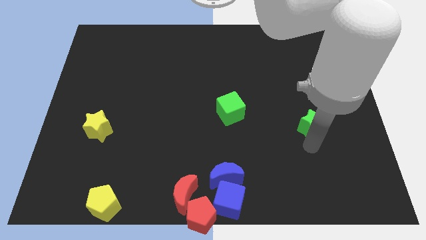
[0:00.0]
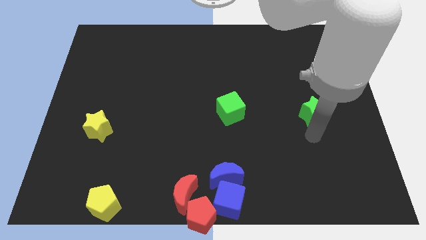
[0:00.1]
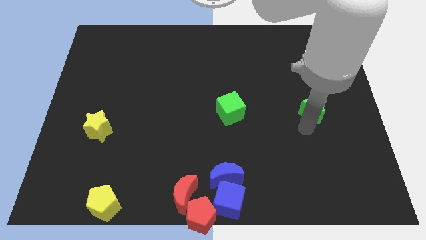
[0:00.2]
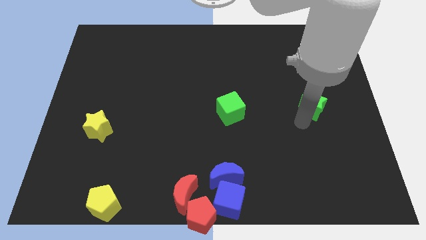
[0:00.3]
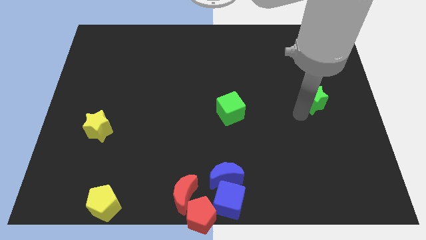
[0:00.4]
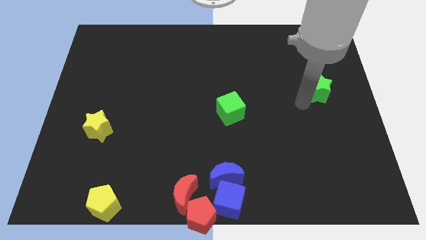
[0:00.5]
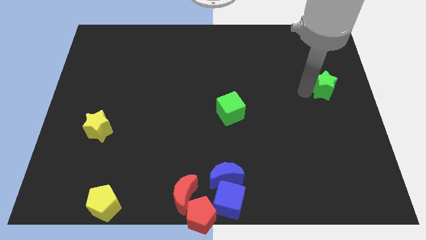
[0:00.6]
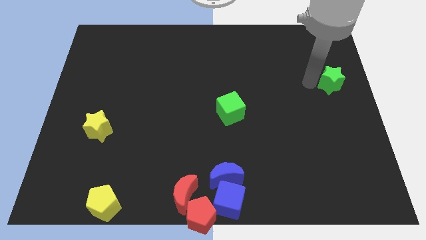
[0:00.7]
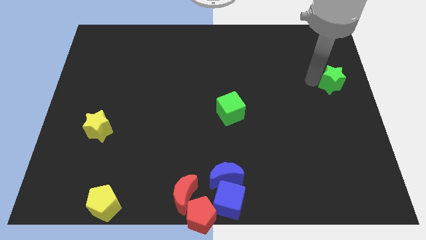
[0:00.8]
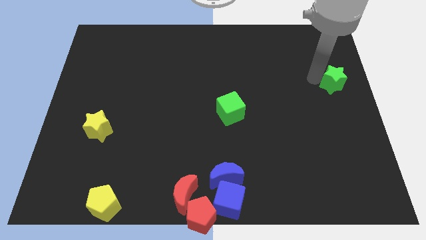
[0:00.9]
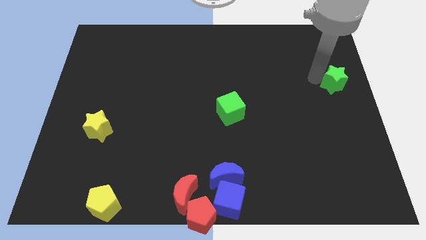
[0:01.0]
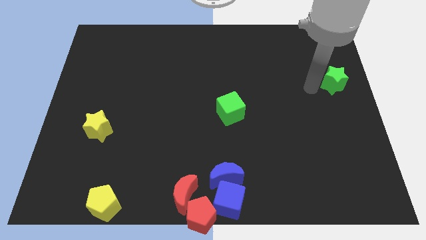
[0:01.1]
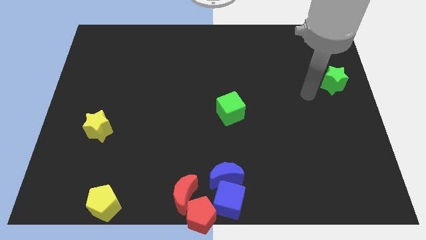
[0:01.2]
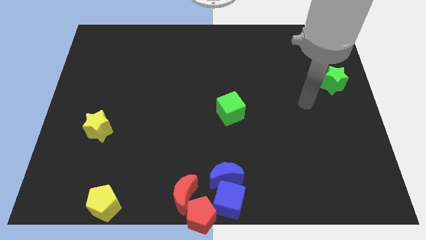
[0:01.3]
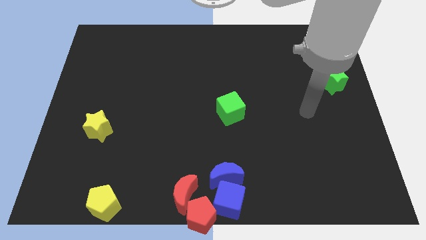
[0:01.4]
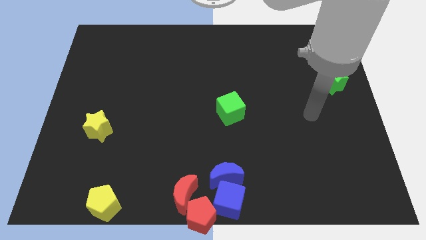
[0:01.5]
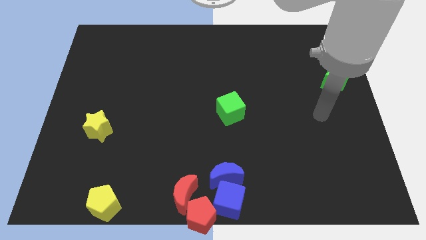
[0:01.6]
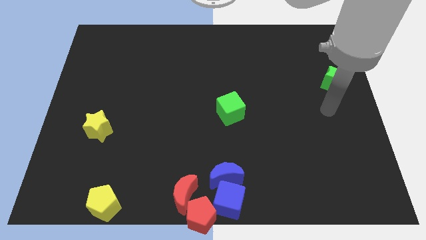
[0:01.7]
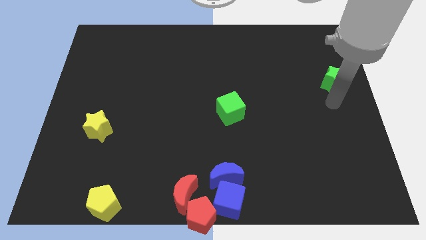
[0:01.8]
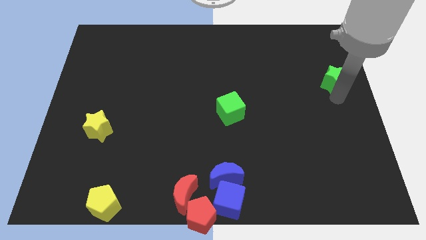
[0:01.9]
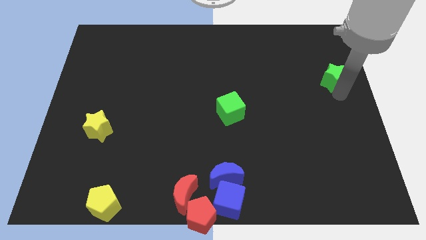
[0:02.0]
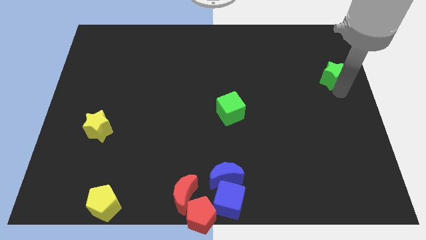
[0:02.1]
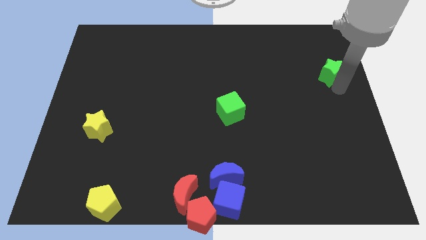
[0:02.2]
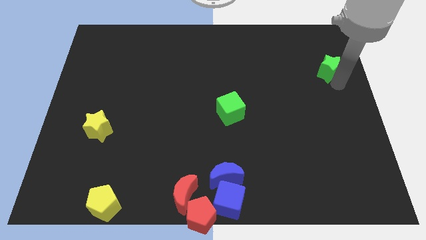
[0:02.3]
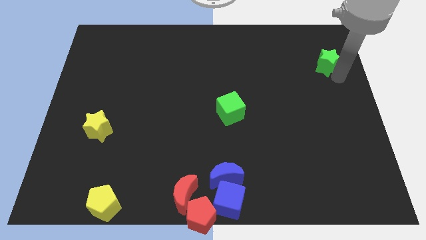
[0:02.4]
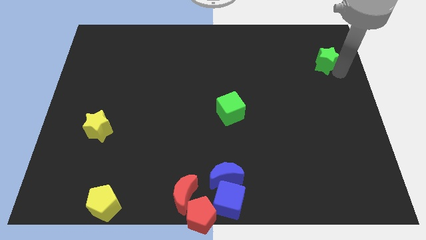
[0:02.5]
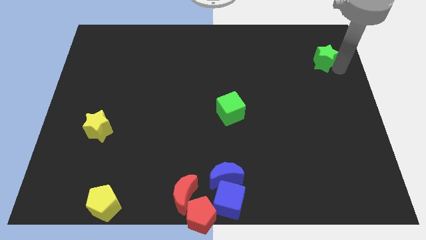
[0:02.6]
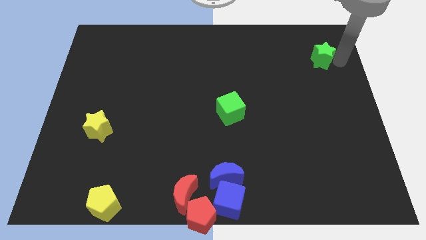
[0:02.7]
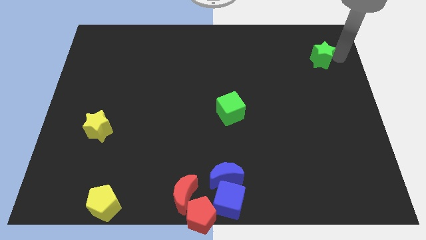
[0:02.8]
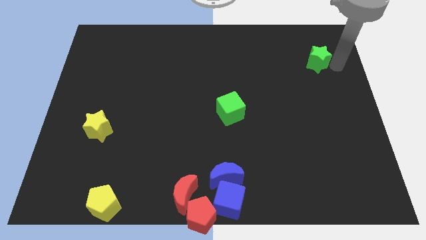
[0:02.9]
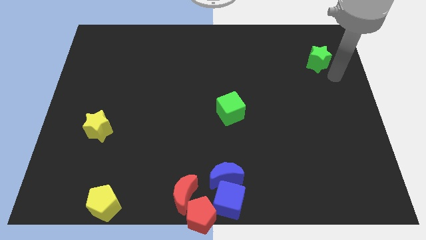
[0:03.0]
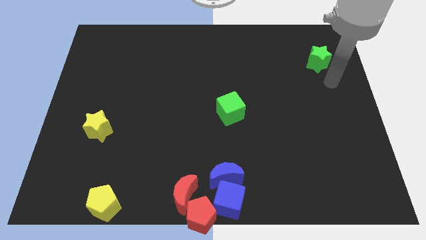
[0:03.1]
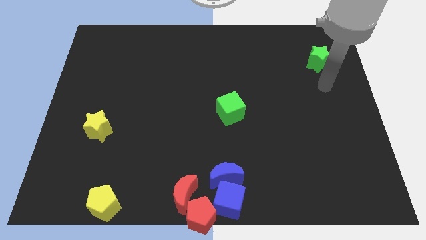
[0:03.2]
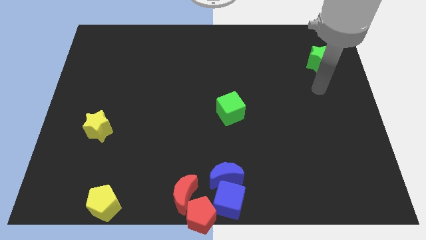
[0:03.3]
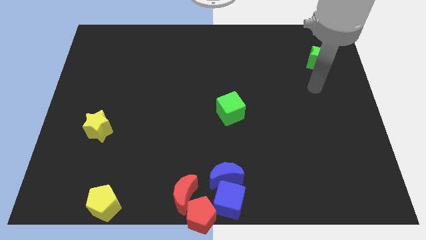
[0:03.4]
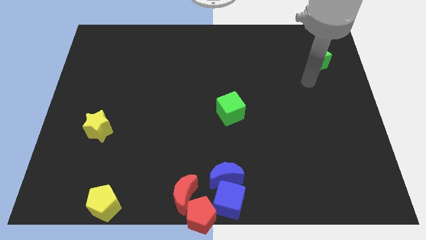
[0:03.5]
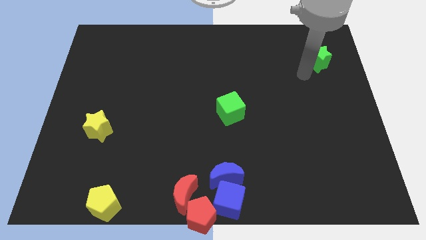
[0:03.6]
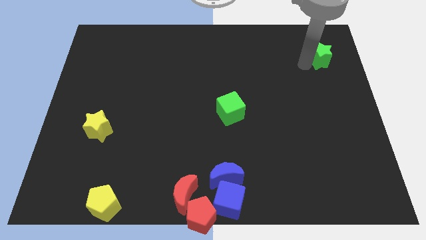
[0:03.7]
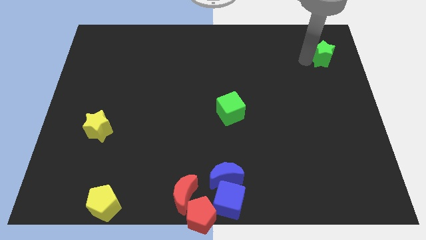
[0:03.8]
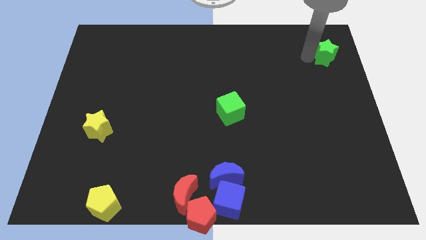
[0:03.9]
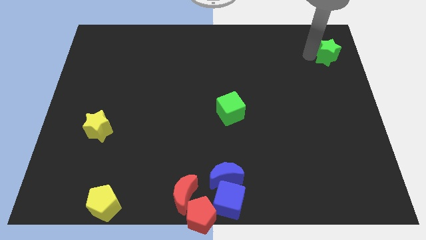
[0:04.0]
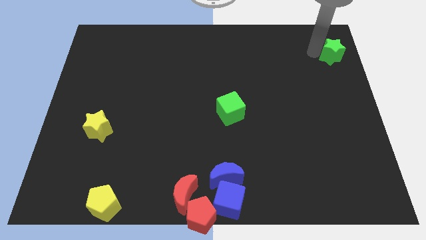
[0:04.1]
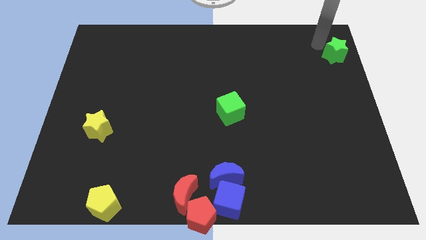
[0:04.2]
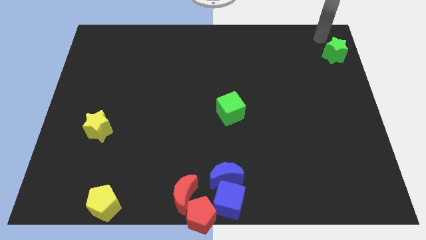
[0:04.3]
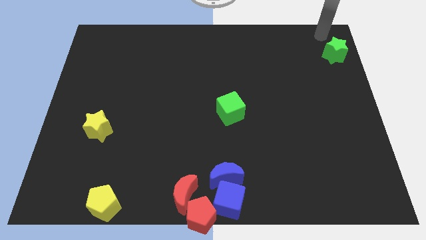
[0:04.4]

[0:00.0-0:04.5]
move the green star to the top right side

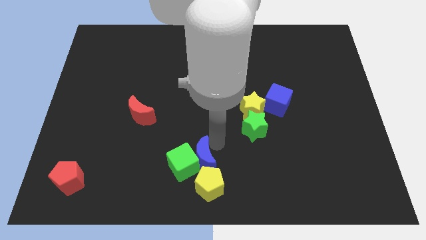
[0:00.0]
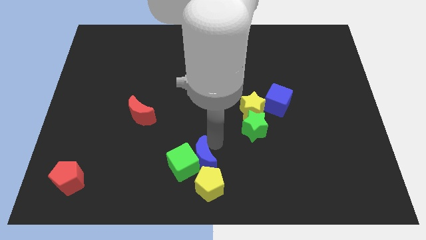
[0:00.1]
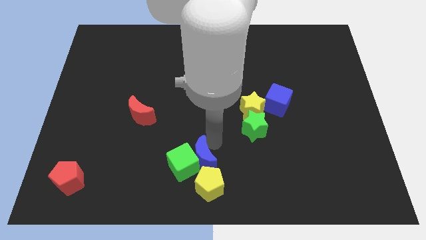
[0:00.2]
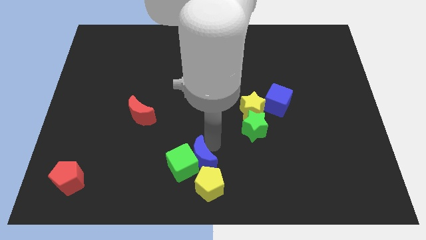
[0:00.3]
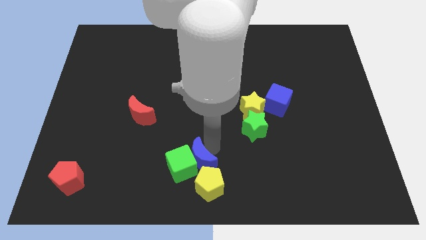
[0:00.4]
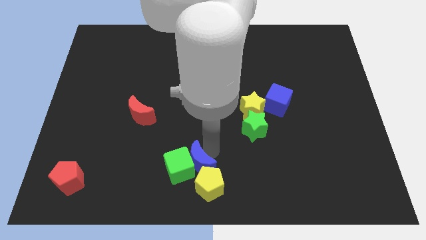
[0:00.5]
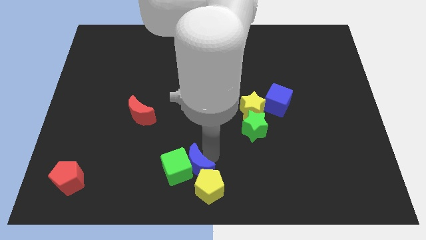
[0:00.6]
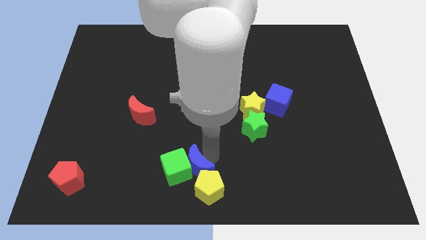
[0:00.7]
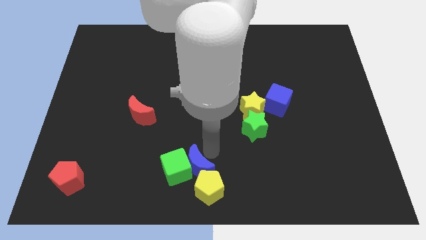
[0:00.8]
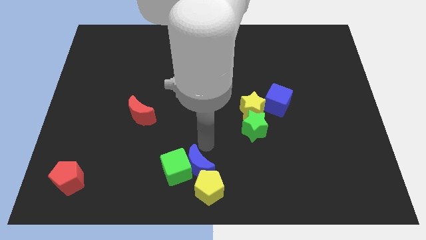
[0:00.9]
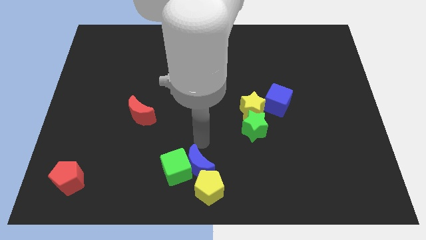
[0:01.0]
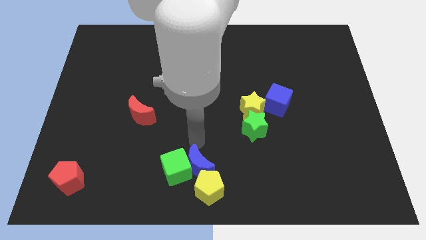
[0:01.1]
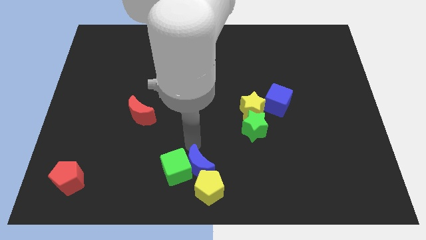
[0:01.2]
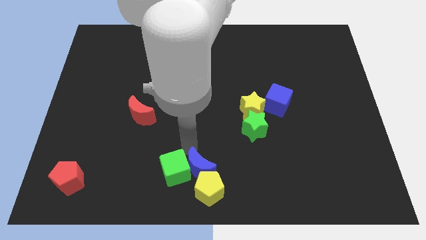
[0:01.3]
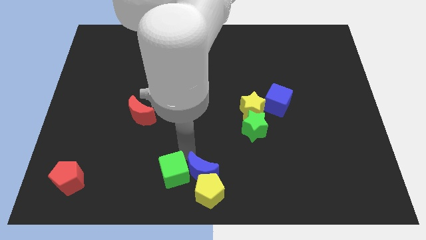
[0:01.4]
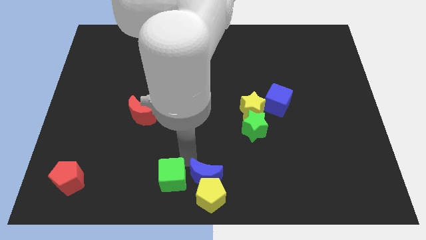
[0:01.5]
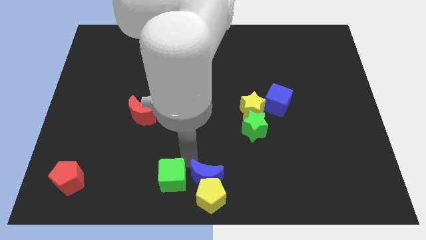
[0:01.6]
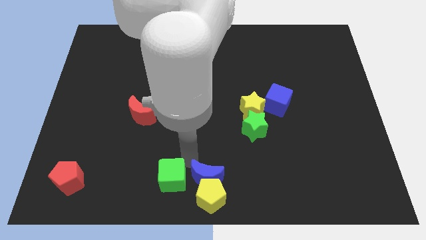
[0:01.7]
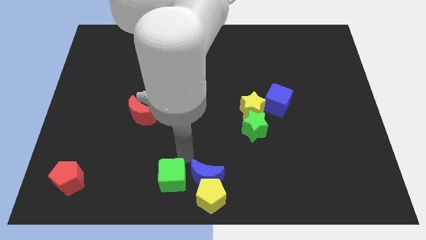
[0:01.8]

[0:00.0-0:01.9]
place blue crescent above yellow pentagon

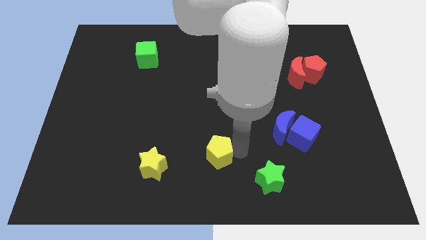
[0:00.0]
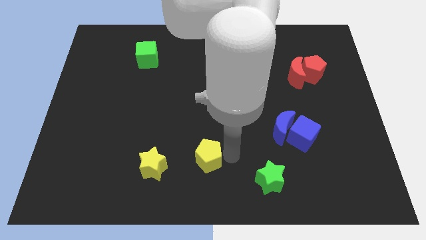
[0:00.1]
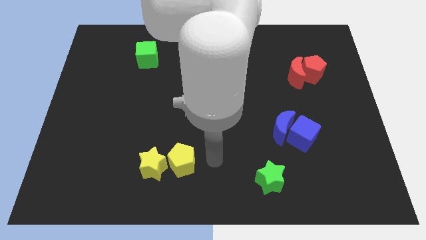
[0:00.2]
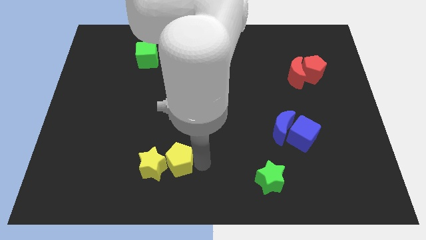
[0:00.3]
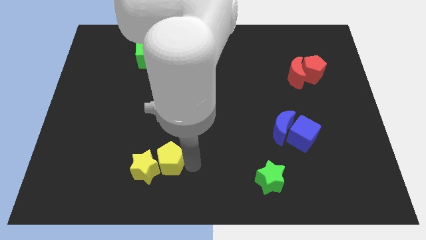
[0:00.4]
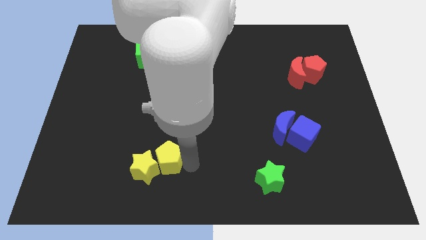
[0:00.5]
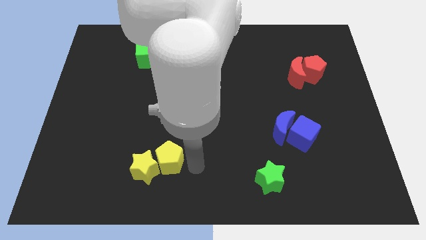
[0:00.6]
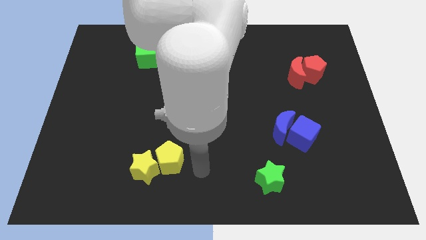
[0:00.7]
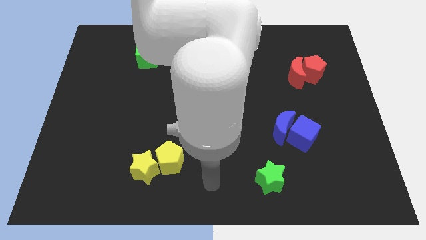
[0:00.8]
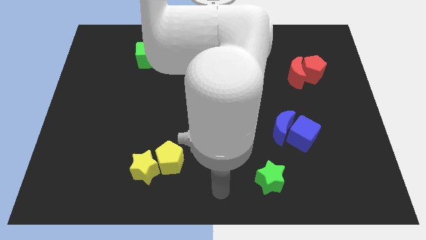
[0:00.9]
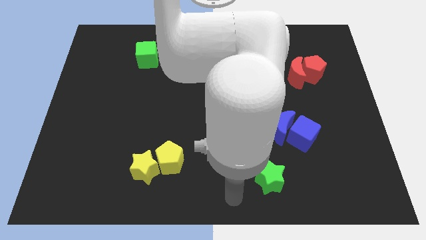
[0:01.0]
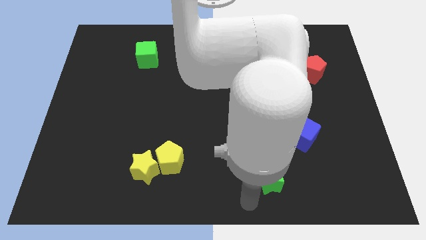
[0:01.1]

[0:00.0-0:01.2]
touch the yellow star with the yellow pentagon

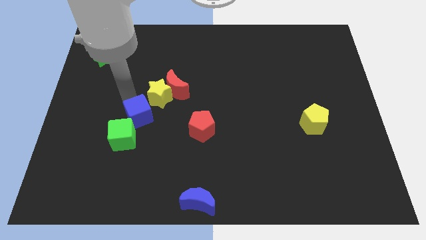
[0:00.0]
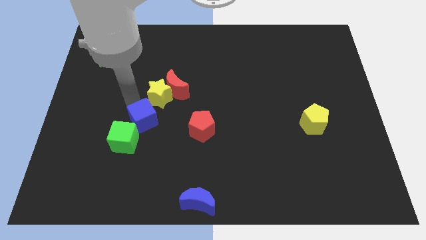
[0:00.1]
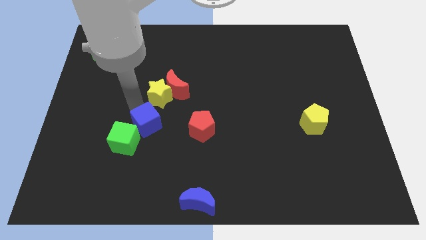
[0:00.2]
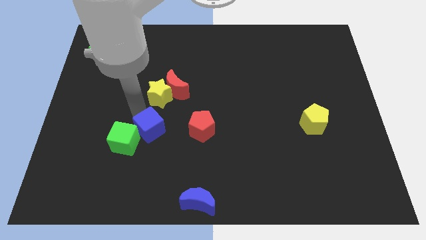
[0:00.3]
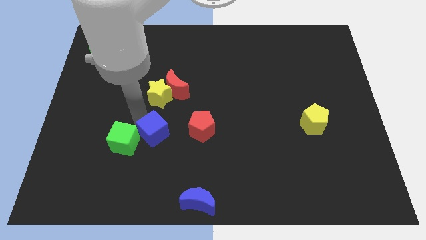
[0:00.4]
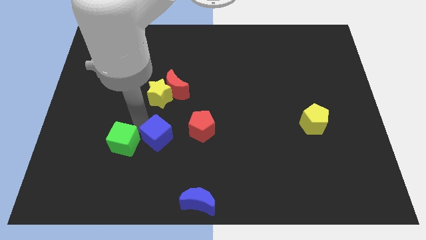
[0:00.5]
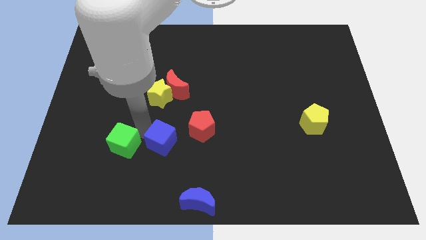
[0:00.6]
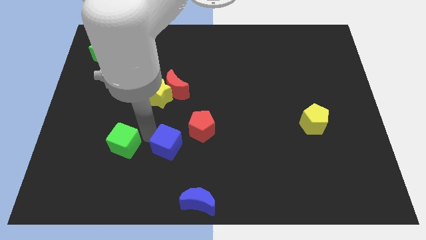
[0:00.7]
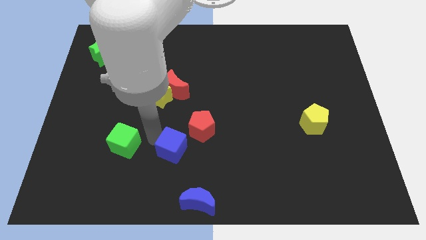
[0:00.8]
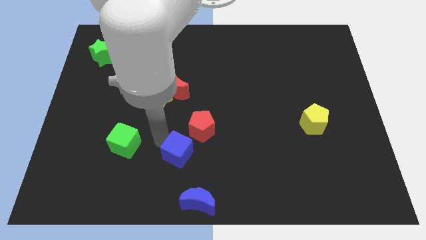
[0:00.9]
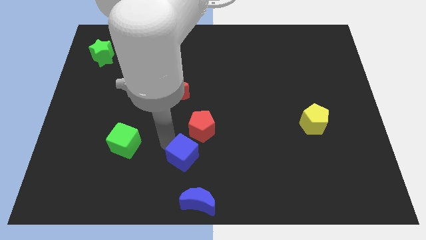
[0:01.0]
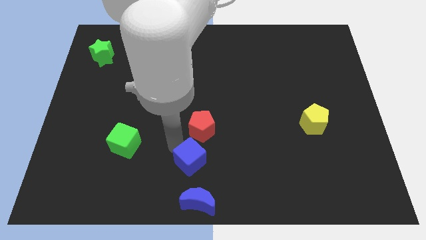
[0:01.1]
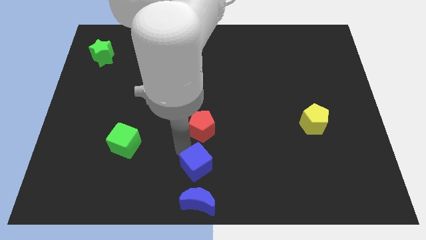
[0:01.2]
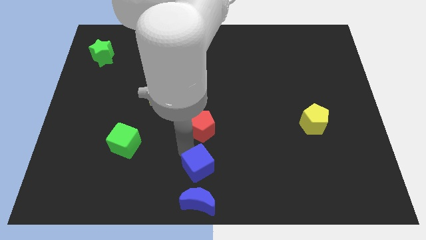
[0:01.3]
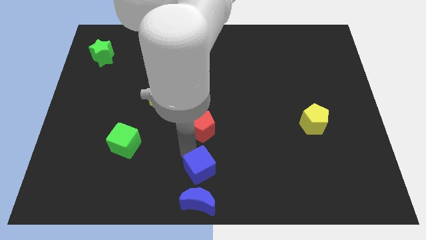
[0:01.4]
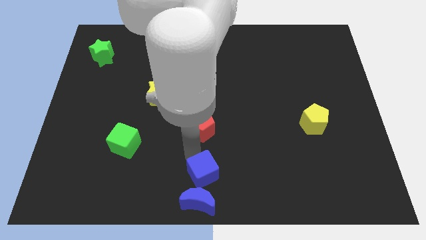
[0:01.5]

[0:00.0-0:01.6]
move the blue cube to the top of the blue crescent

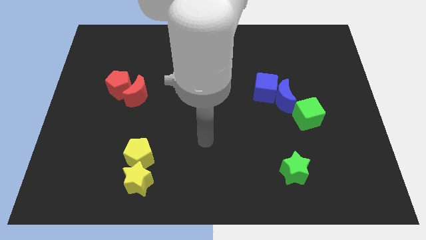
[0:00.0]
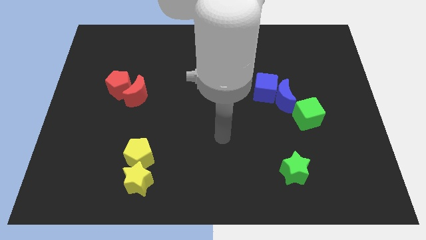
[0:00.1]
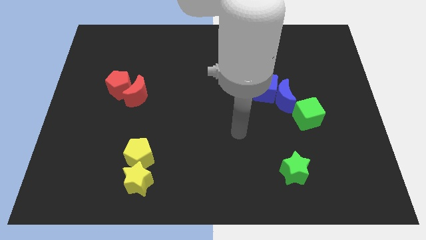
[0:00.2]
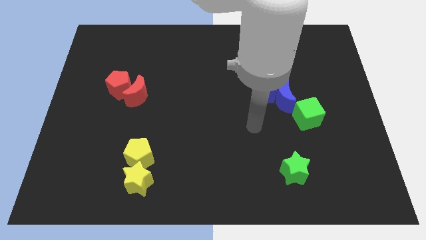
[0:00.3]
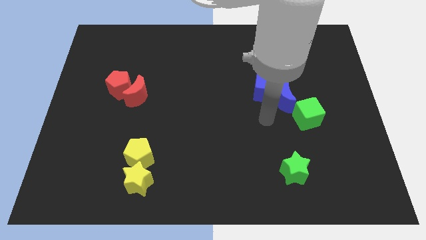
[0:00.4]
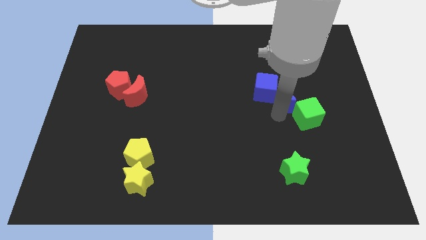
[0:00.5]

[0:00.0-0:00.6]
place your arm below blue moon
